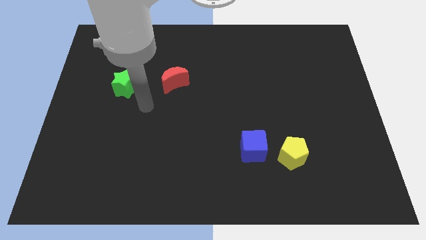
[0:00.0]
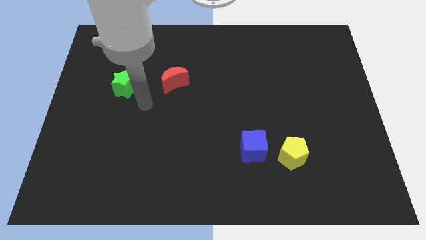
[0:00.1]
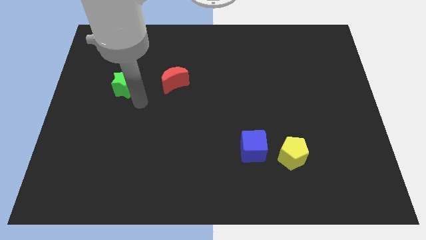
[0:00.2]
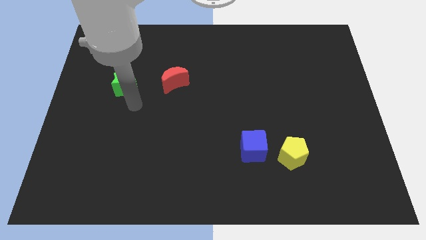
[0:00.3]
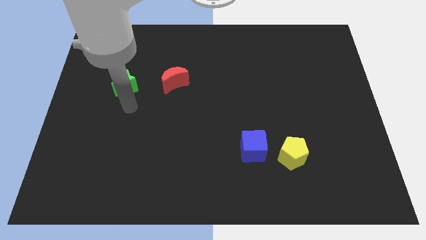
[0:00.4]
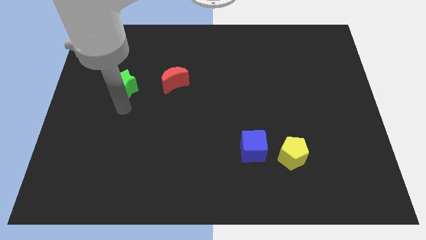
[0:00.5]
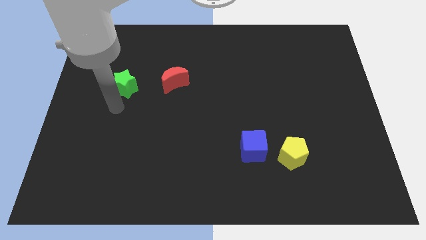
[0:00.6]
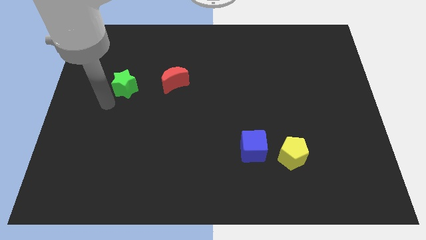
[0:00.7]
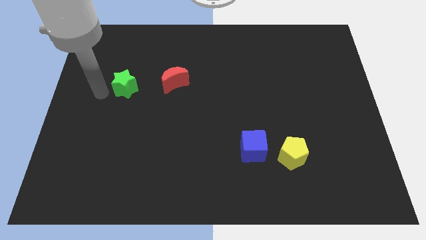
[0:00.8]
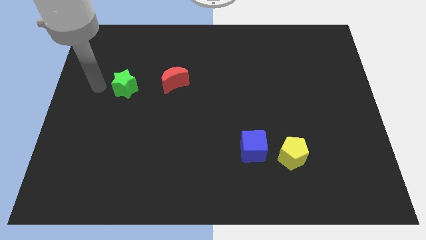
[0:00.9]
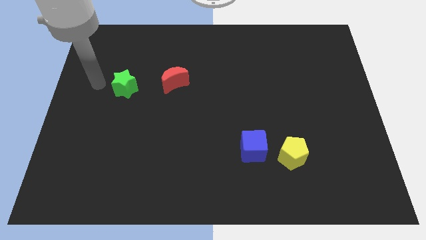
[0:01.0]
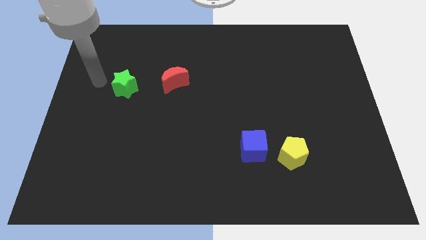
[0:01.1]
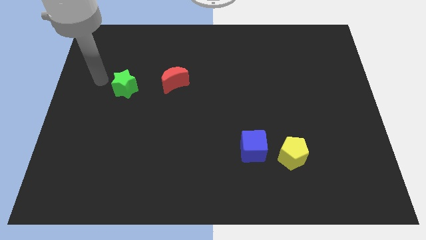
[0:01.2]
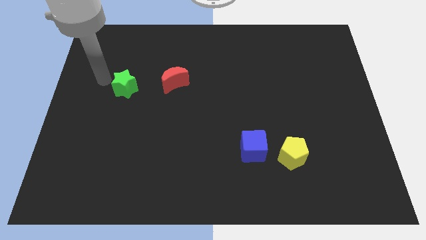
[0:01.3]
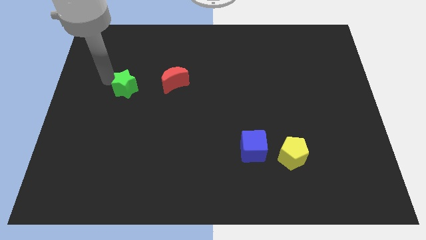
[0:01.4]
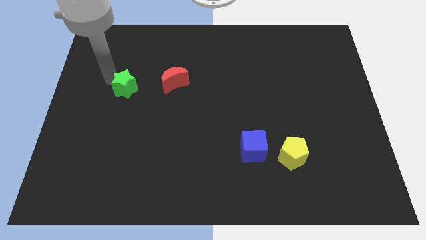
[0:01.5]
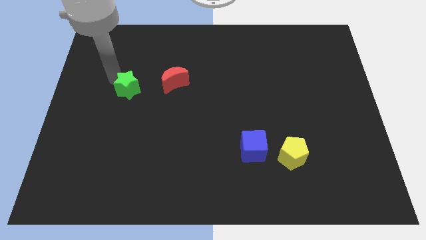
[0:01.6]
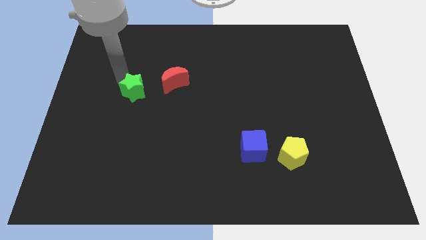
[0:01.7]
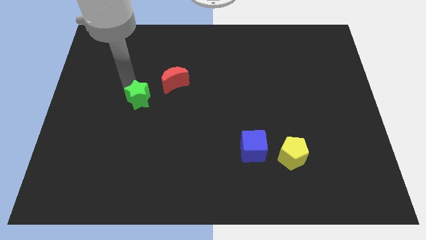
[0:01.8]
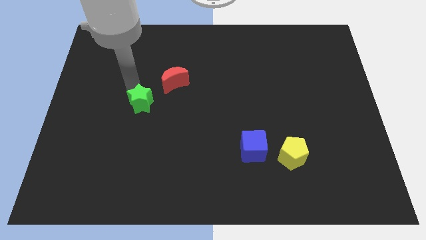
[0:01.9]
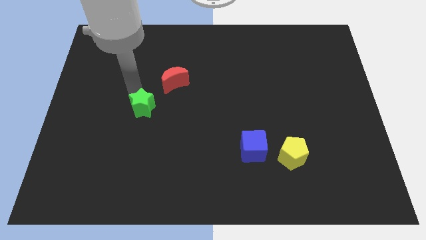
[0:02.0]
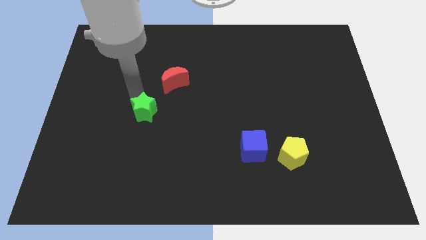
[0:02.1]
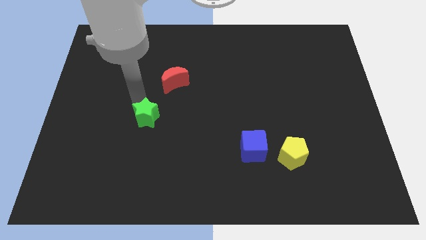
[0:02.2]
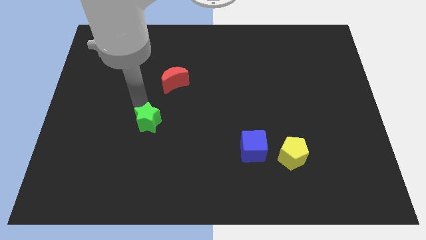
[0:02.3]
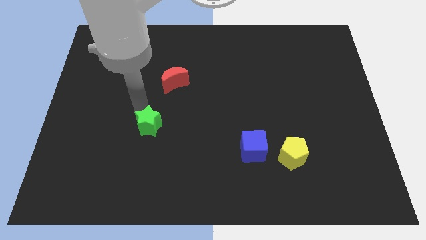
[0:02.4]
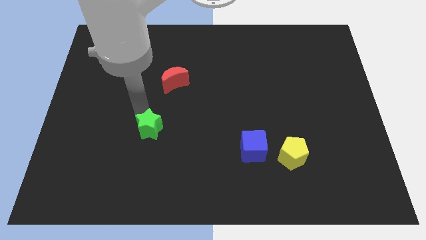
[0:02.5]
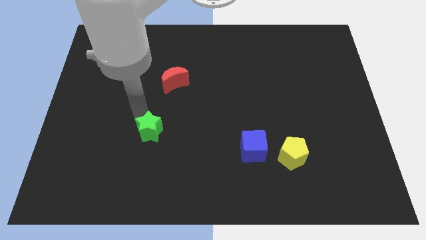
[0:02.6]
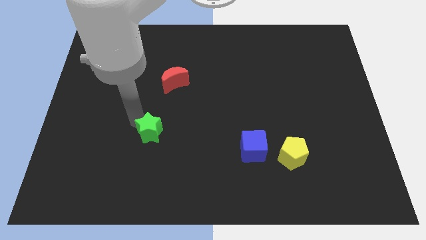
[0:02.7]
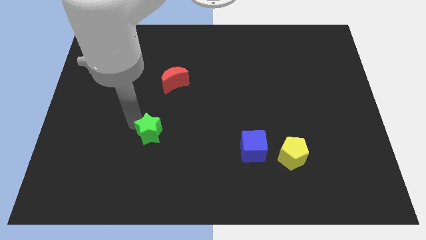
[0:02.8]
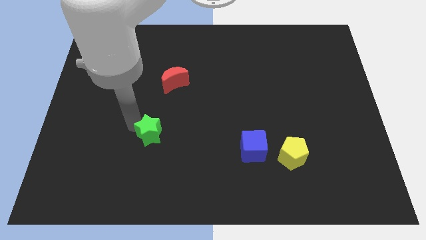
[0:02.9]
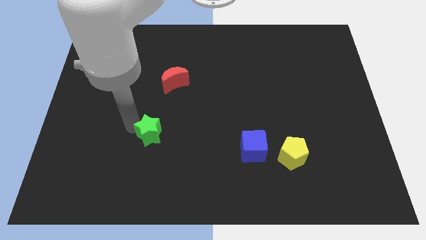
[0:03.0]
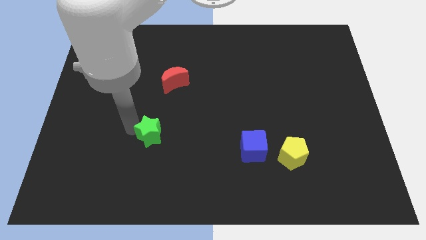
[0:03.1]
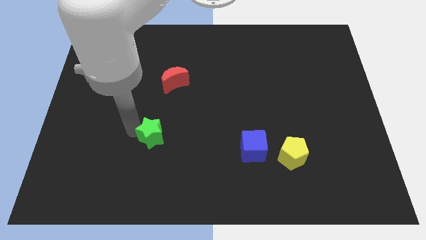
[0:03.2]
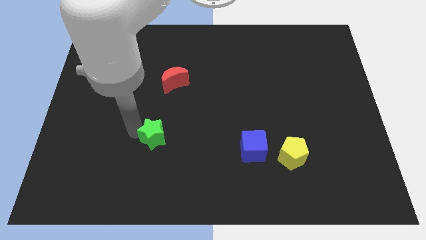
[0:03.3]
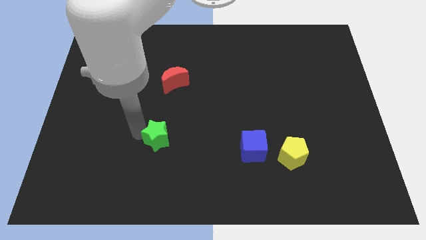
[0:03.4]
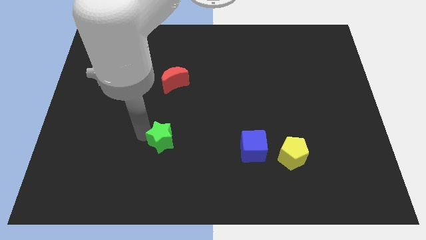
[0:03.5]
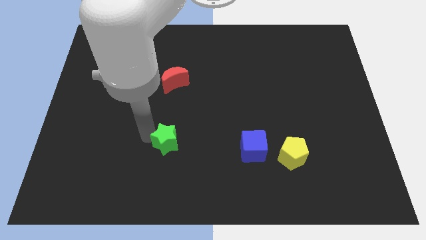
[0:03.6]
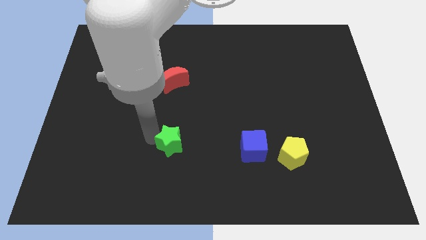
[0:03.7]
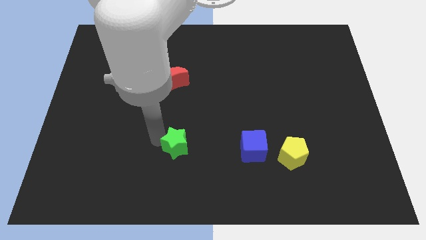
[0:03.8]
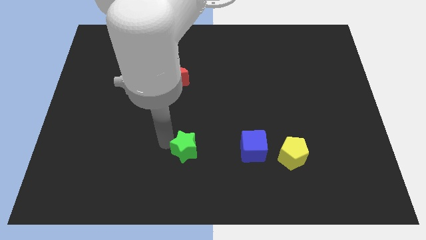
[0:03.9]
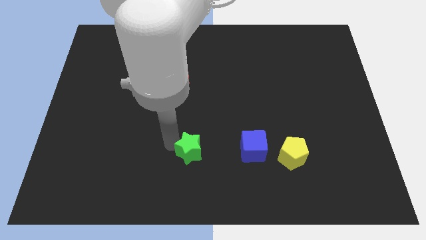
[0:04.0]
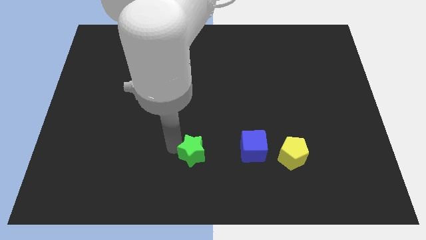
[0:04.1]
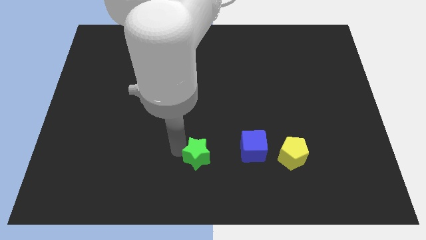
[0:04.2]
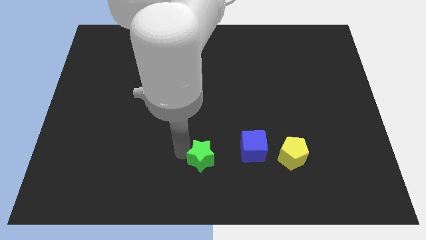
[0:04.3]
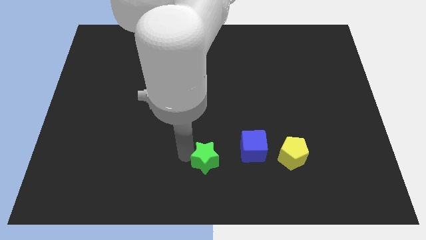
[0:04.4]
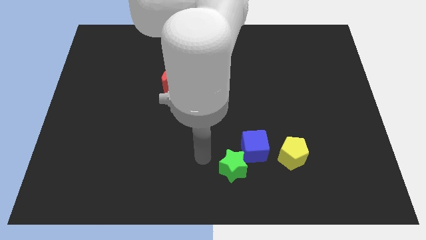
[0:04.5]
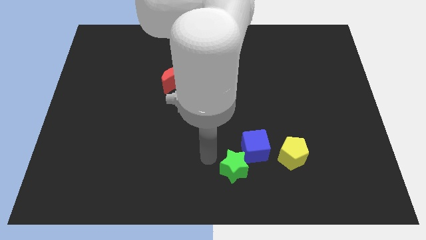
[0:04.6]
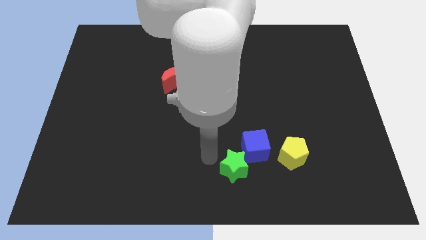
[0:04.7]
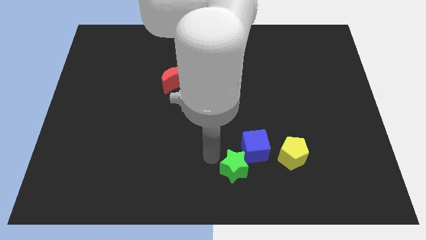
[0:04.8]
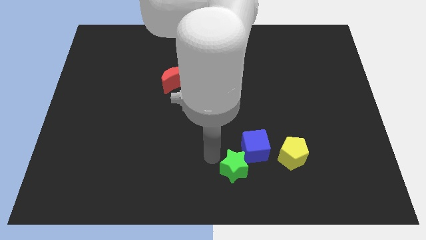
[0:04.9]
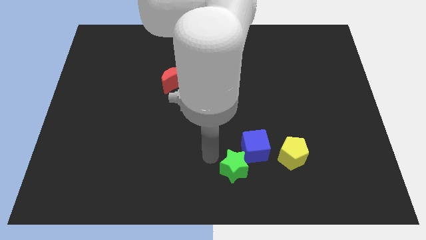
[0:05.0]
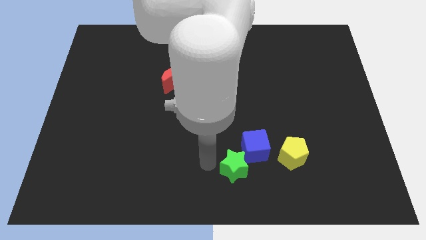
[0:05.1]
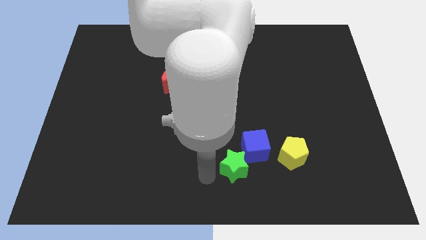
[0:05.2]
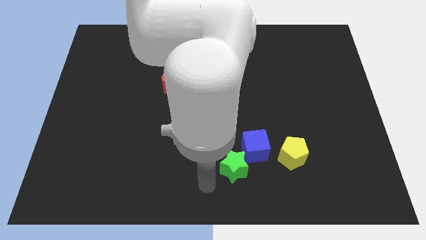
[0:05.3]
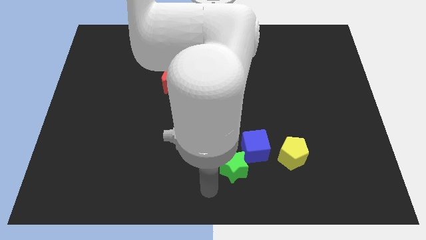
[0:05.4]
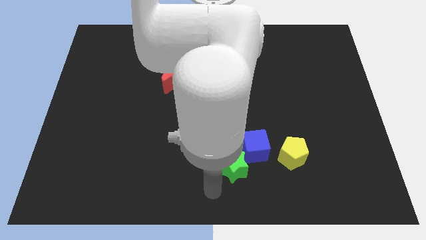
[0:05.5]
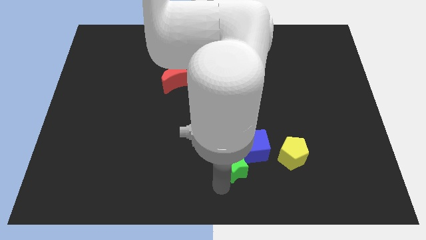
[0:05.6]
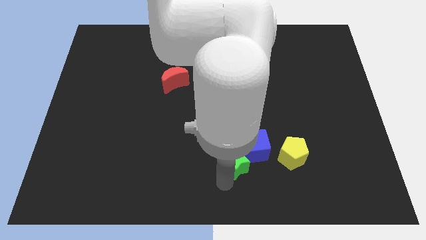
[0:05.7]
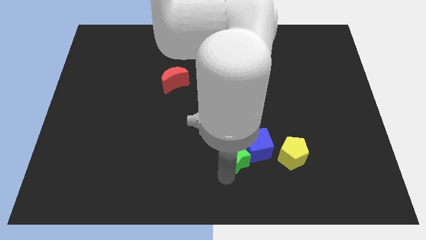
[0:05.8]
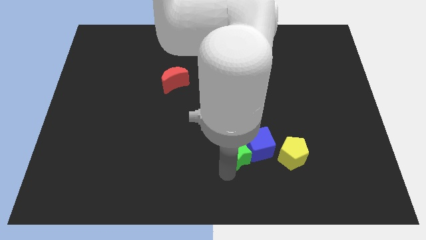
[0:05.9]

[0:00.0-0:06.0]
move the star to the cube

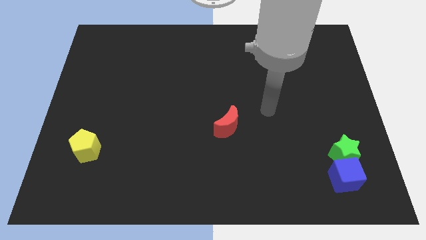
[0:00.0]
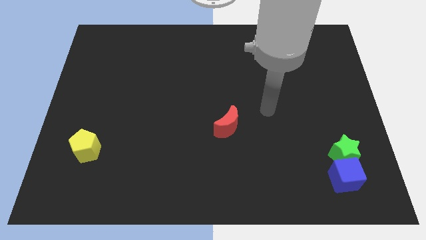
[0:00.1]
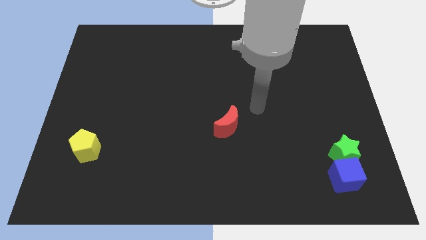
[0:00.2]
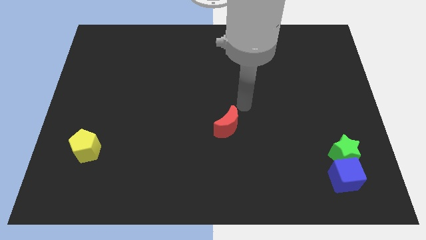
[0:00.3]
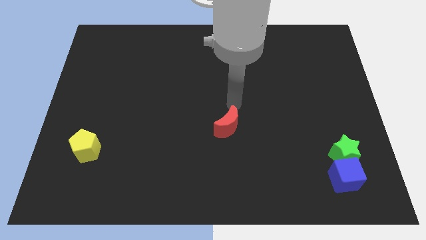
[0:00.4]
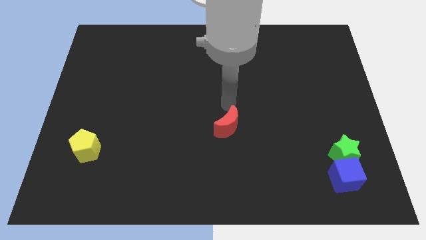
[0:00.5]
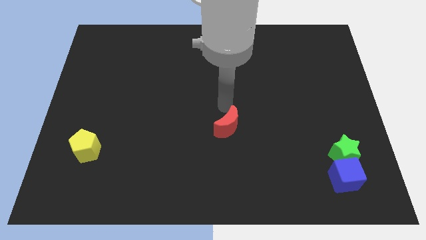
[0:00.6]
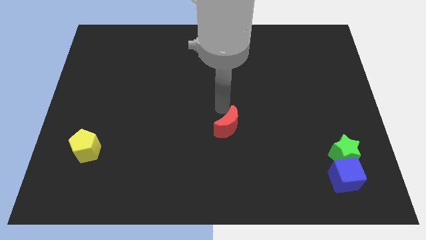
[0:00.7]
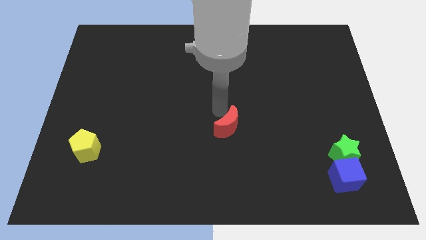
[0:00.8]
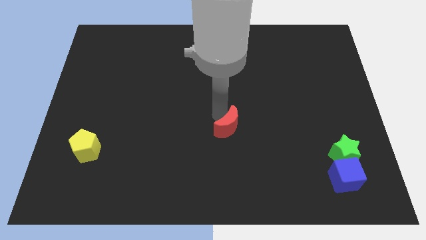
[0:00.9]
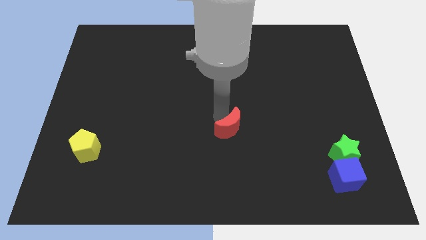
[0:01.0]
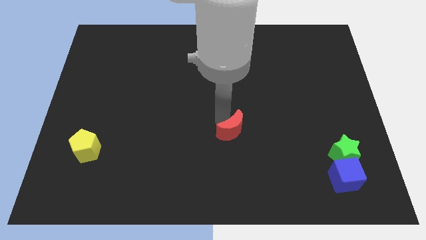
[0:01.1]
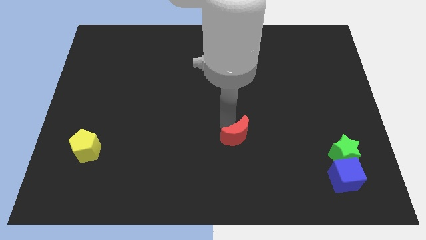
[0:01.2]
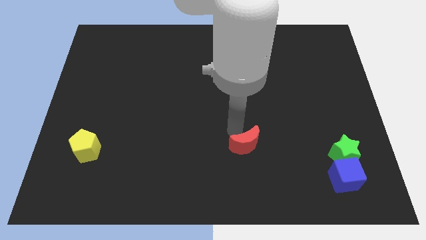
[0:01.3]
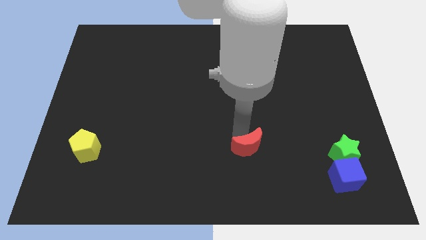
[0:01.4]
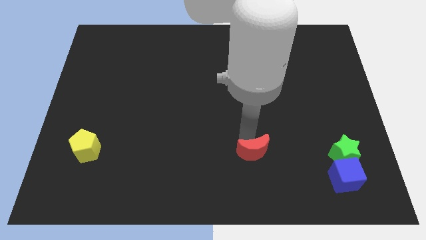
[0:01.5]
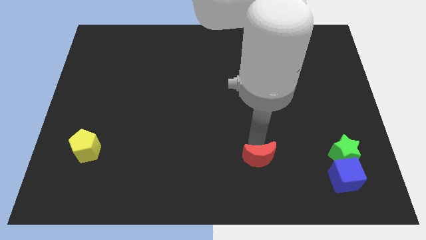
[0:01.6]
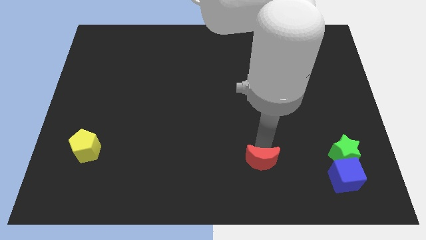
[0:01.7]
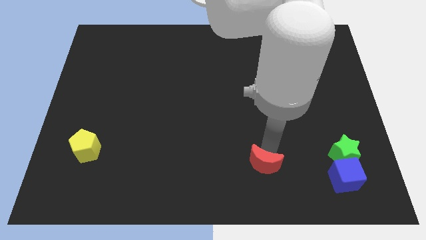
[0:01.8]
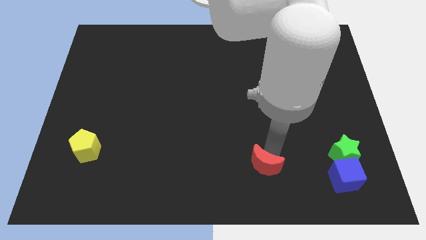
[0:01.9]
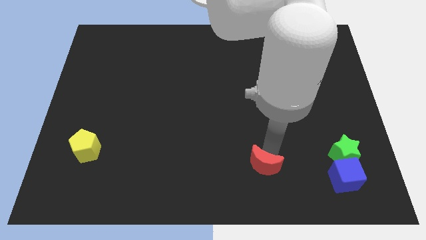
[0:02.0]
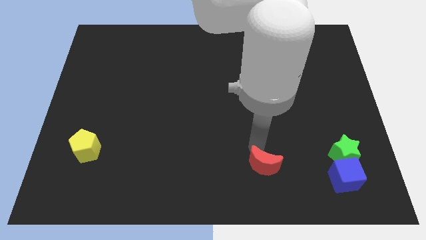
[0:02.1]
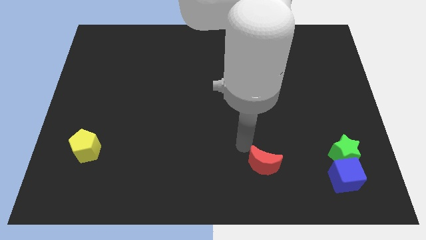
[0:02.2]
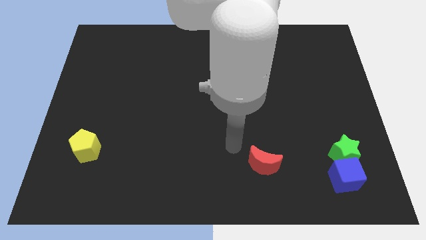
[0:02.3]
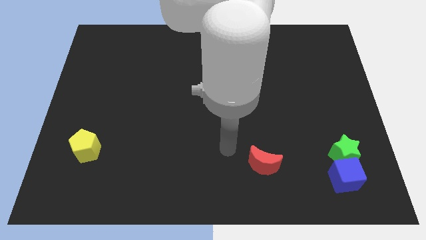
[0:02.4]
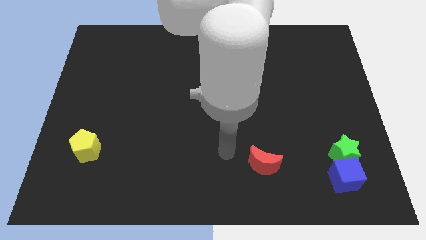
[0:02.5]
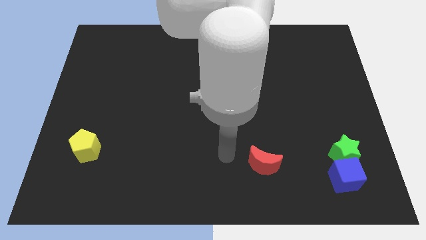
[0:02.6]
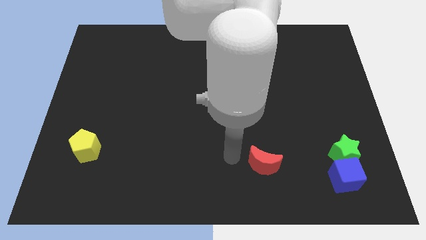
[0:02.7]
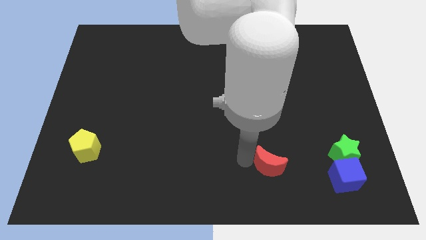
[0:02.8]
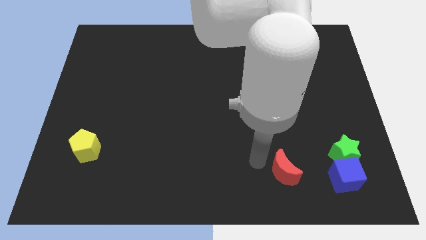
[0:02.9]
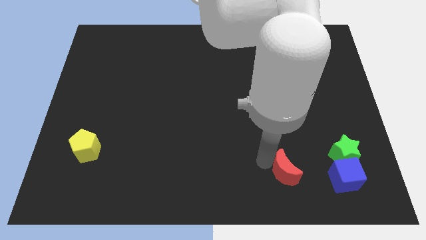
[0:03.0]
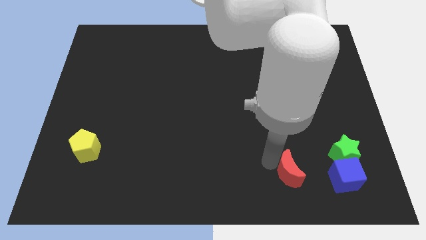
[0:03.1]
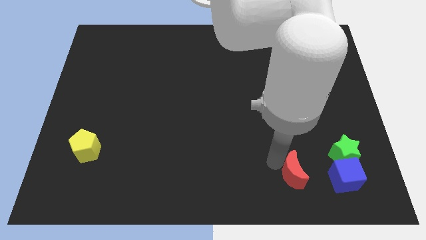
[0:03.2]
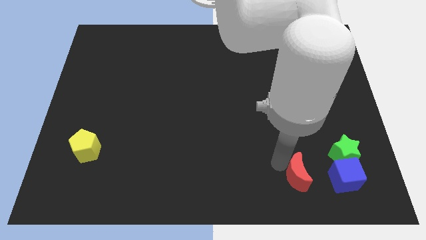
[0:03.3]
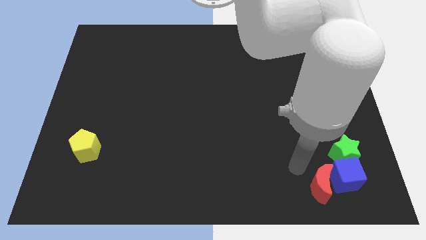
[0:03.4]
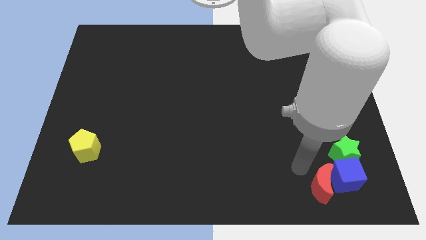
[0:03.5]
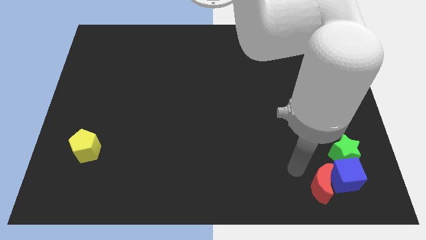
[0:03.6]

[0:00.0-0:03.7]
move the red block close to the cube
